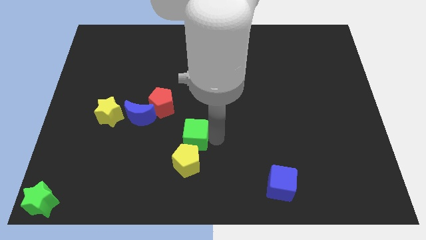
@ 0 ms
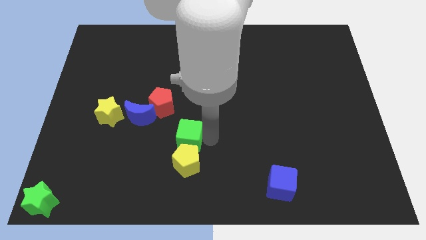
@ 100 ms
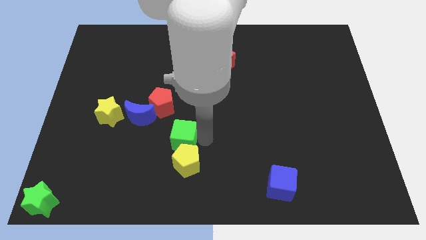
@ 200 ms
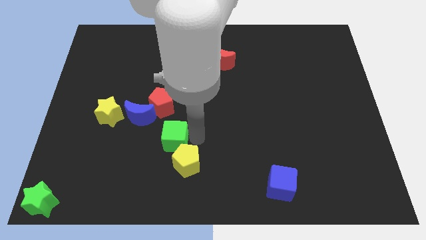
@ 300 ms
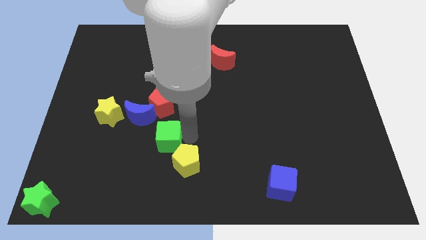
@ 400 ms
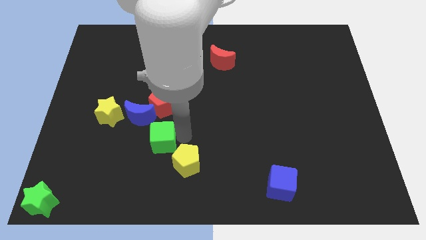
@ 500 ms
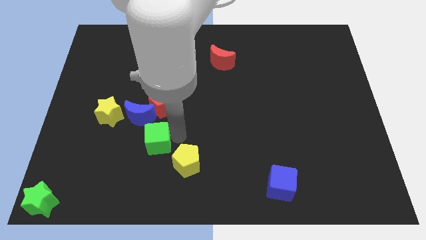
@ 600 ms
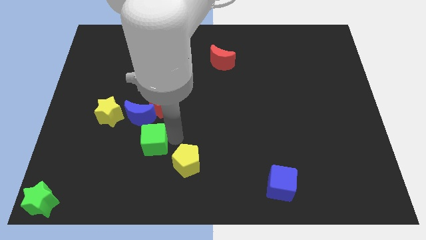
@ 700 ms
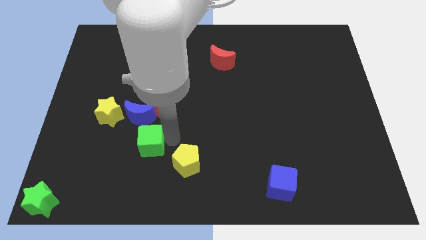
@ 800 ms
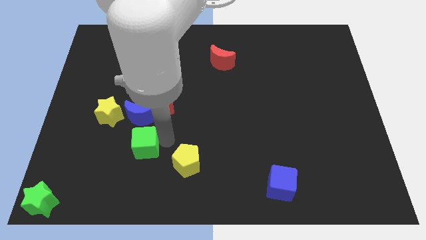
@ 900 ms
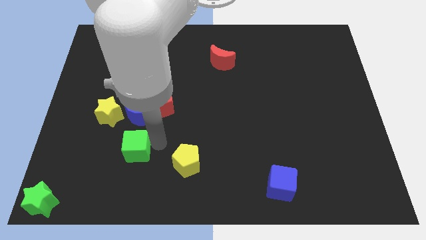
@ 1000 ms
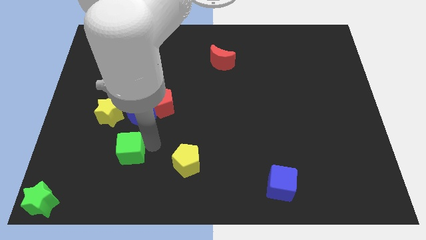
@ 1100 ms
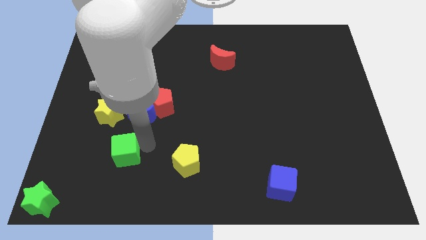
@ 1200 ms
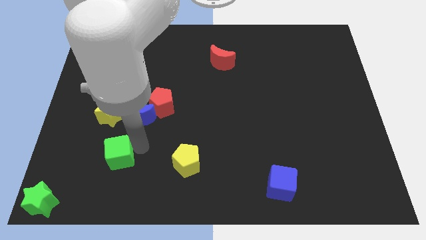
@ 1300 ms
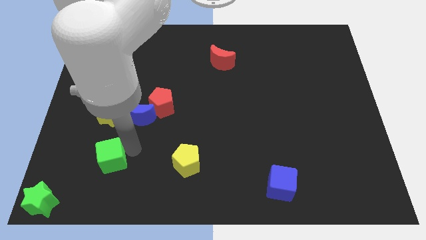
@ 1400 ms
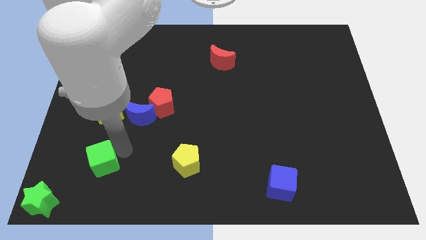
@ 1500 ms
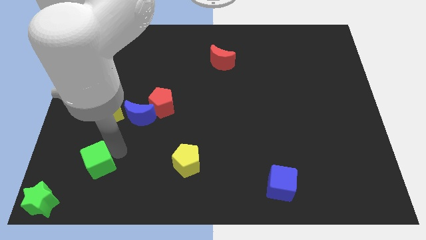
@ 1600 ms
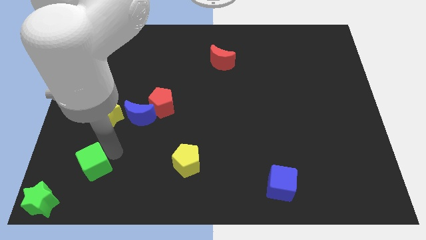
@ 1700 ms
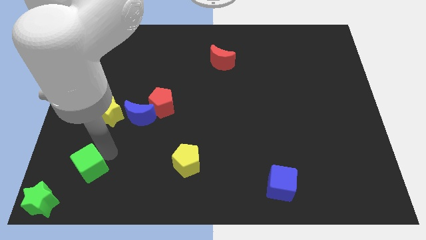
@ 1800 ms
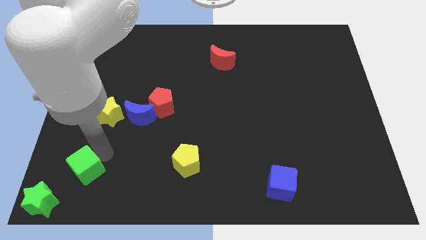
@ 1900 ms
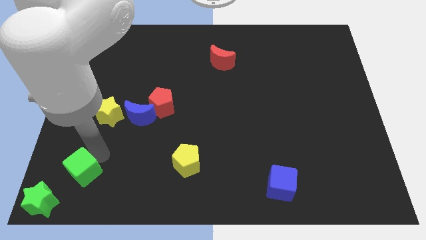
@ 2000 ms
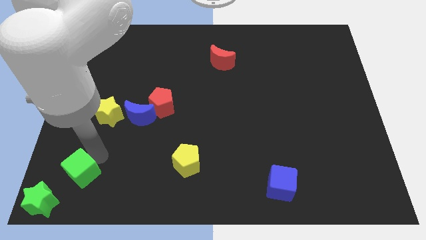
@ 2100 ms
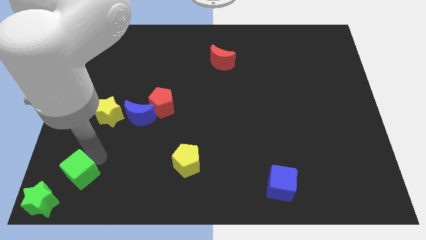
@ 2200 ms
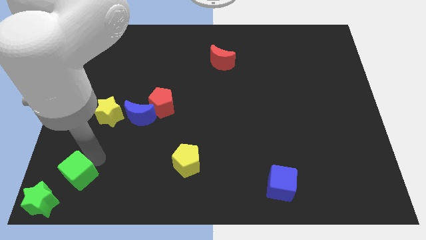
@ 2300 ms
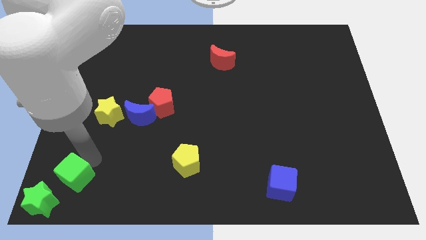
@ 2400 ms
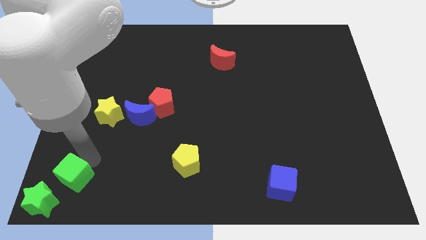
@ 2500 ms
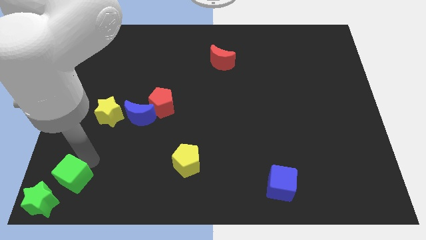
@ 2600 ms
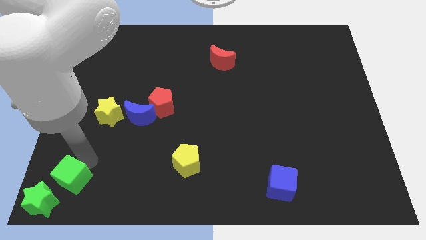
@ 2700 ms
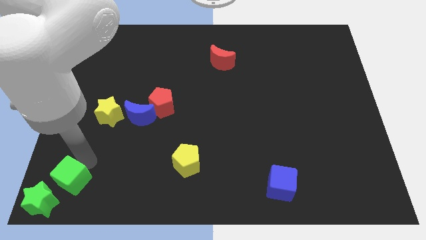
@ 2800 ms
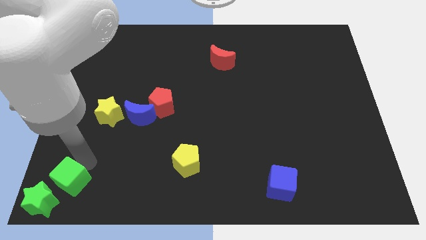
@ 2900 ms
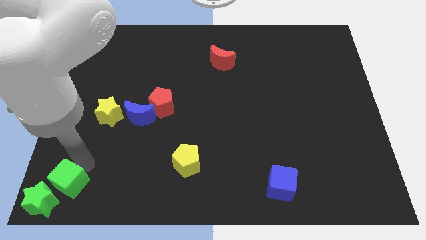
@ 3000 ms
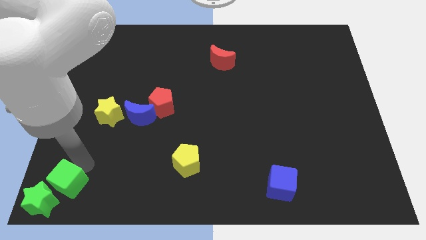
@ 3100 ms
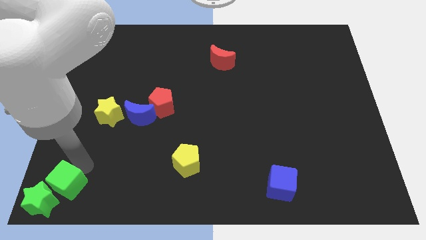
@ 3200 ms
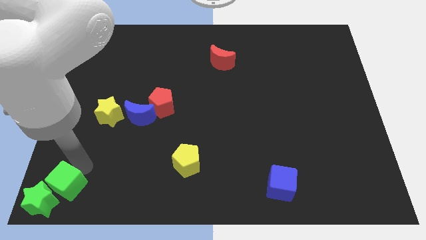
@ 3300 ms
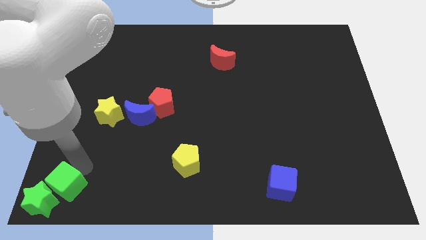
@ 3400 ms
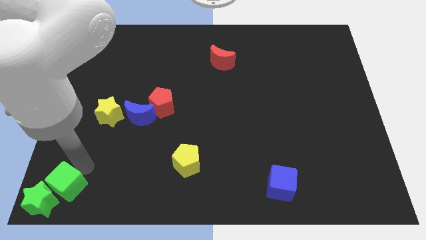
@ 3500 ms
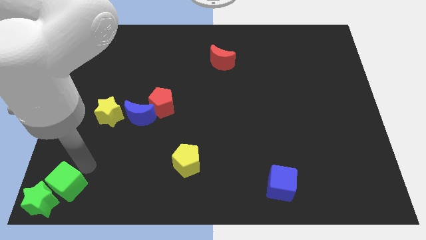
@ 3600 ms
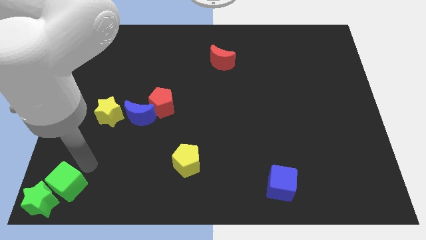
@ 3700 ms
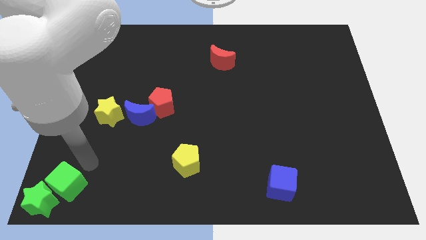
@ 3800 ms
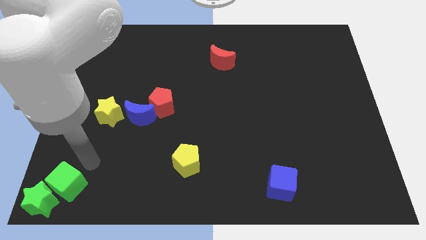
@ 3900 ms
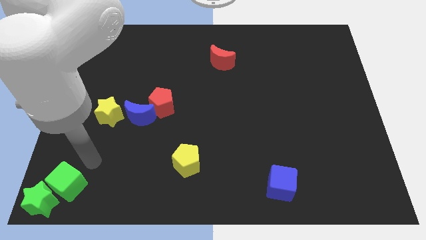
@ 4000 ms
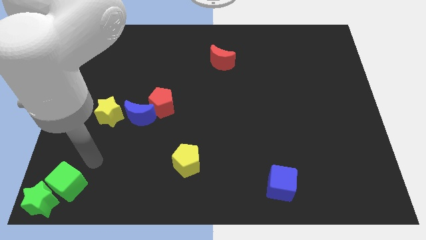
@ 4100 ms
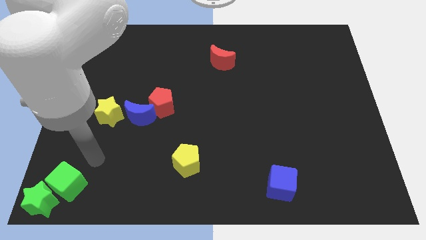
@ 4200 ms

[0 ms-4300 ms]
push the green cube into the top right of the green star

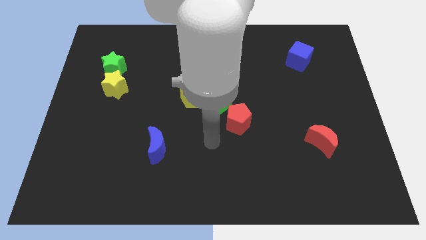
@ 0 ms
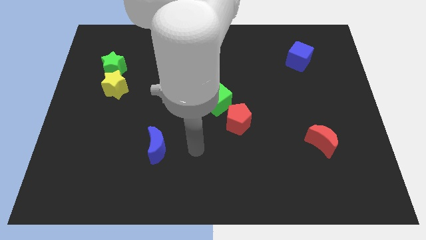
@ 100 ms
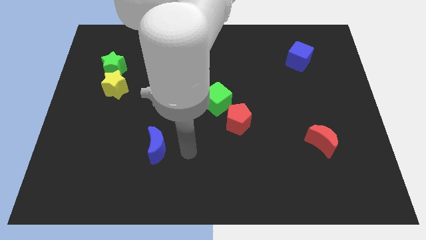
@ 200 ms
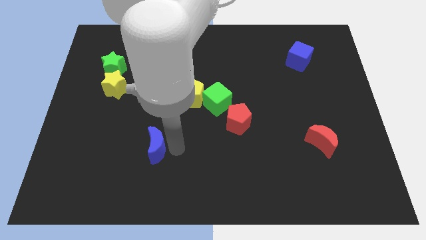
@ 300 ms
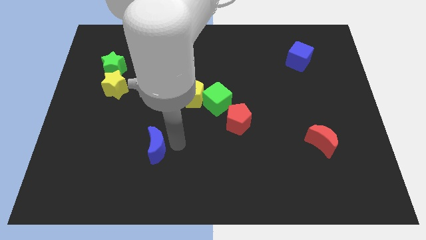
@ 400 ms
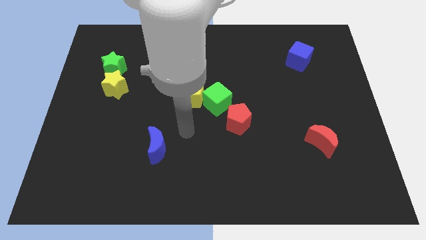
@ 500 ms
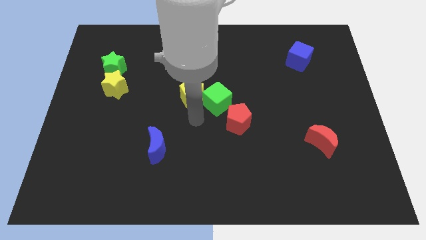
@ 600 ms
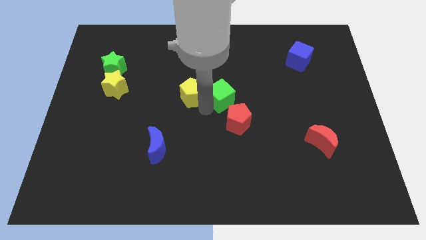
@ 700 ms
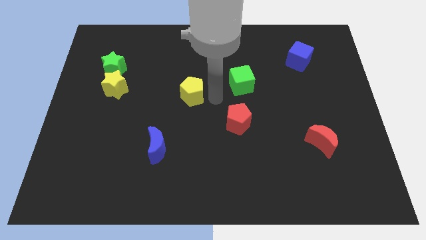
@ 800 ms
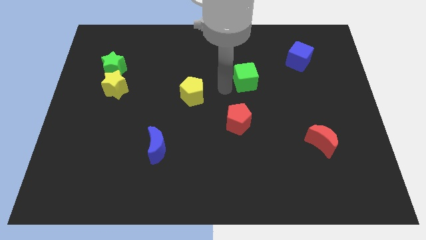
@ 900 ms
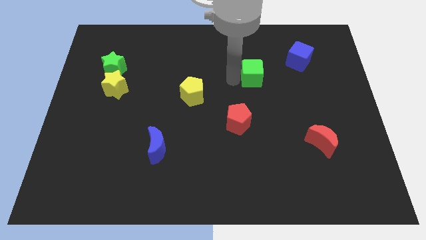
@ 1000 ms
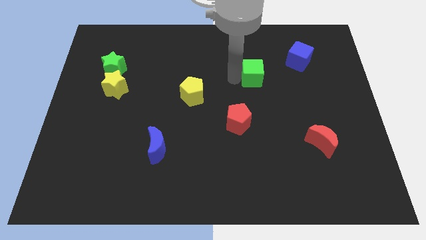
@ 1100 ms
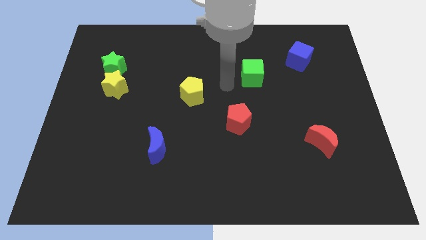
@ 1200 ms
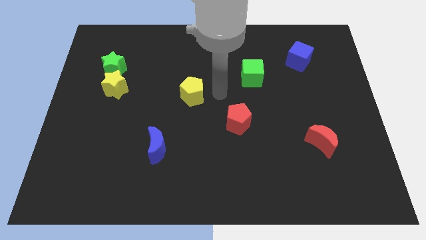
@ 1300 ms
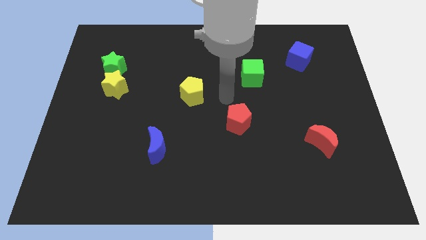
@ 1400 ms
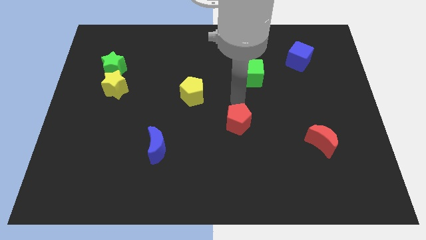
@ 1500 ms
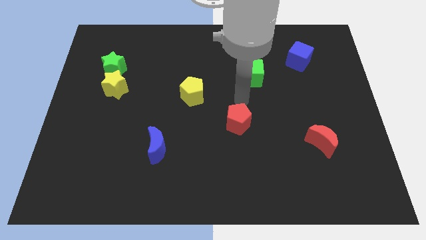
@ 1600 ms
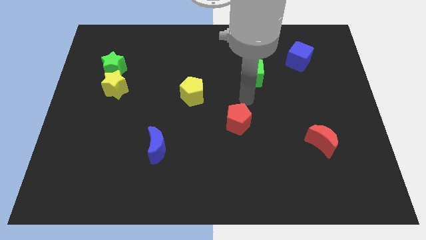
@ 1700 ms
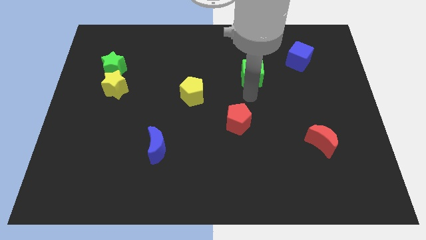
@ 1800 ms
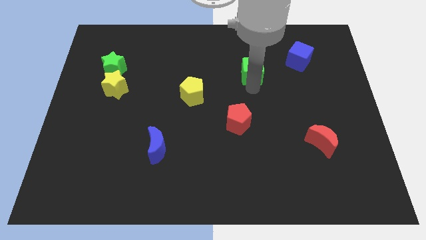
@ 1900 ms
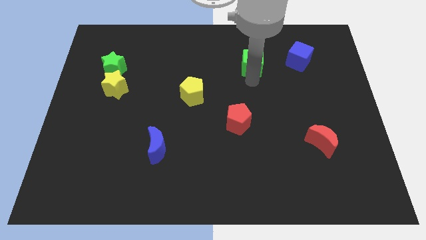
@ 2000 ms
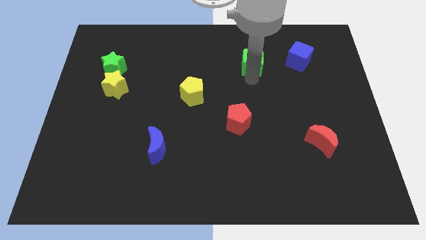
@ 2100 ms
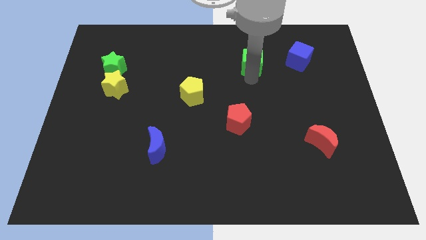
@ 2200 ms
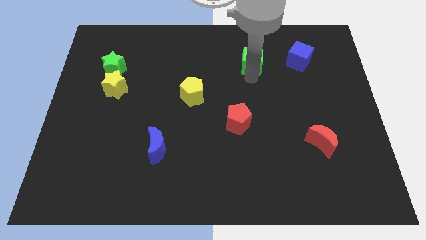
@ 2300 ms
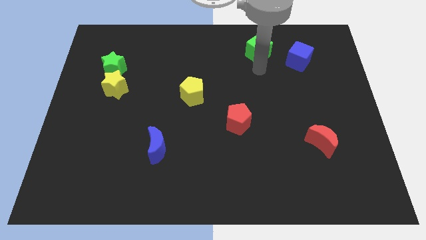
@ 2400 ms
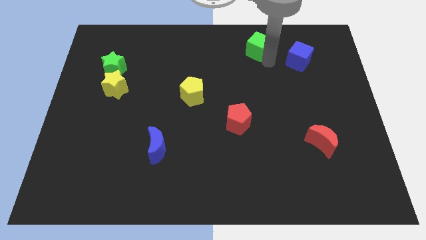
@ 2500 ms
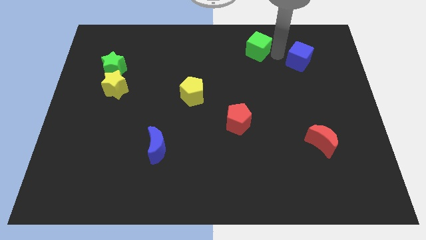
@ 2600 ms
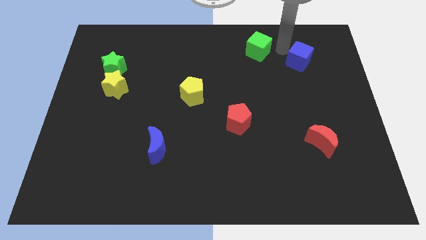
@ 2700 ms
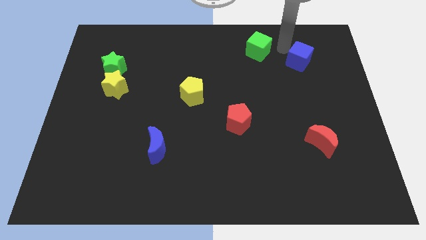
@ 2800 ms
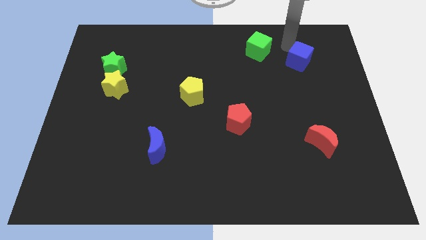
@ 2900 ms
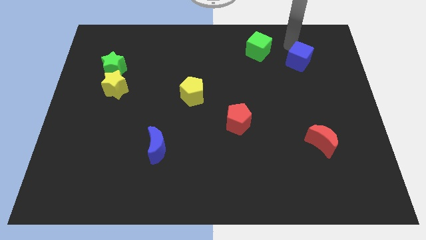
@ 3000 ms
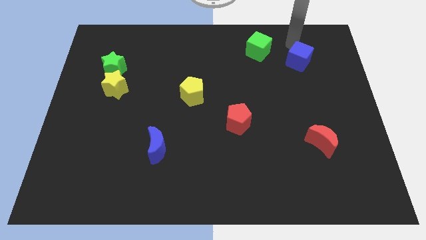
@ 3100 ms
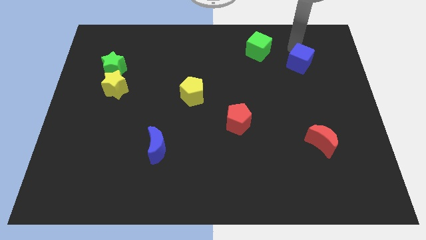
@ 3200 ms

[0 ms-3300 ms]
place the green cube to the left of blue cube

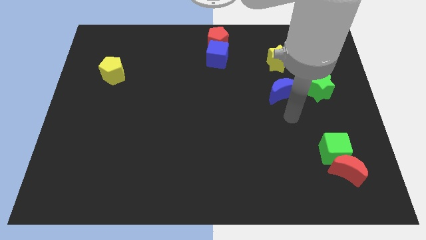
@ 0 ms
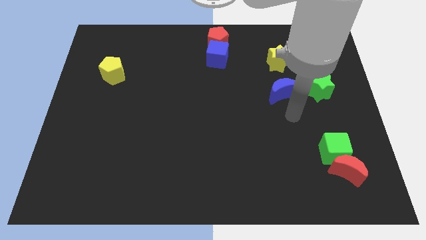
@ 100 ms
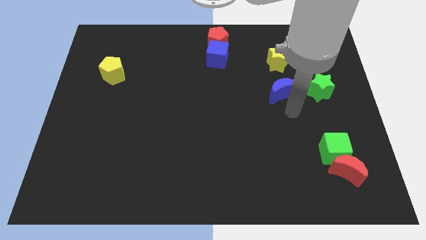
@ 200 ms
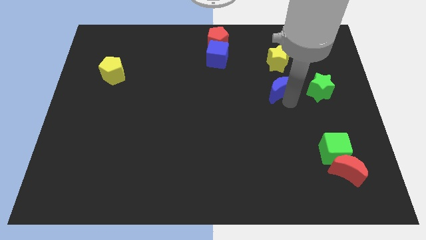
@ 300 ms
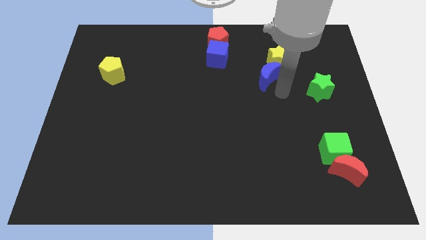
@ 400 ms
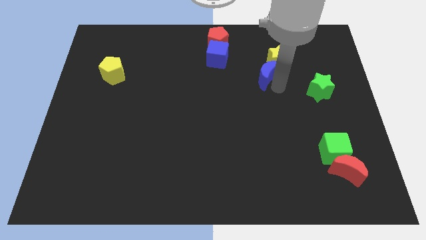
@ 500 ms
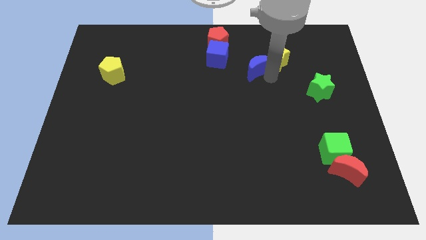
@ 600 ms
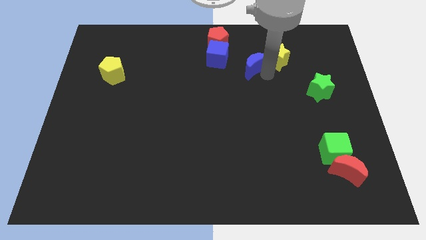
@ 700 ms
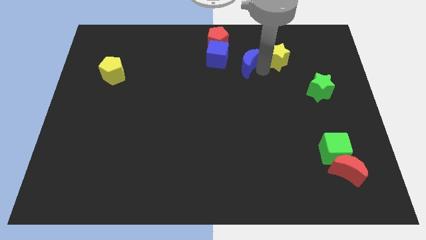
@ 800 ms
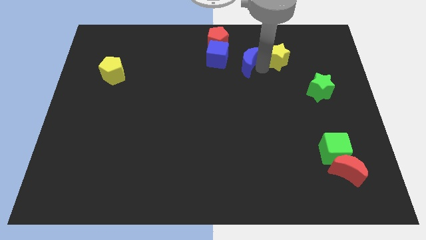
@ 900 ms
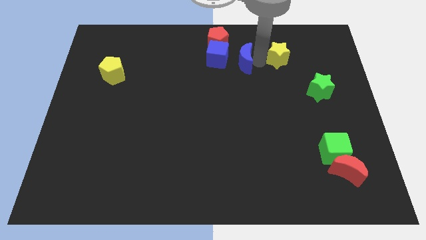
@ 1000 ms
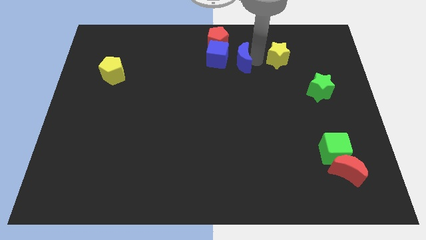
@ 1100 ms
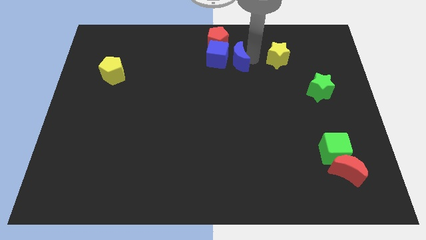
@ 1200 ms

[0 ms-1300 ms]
place blue moon to the right of the blue cube

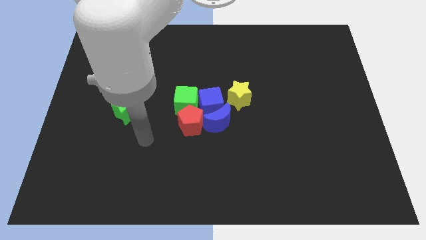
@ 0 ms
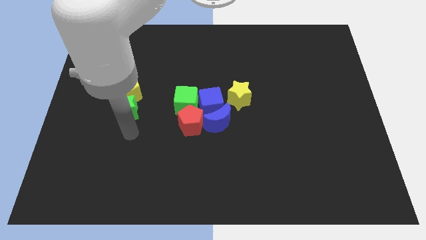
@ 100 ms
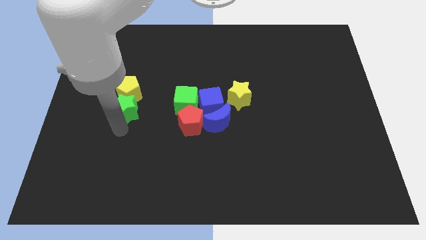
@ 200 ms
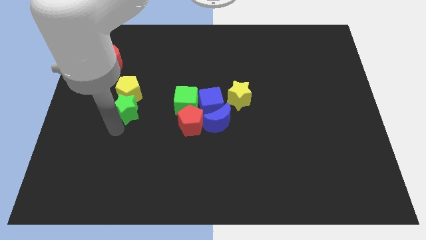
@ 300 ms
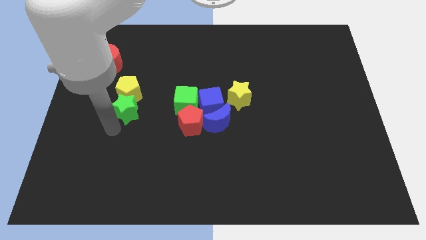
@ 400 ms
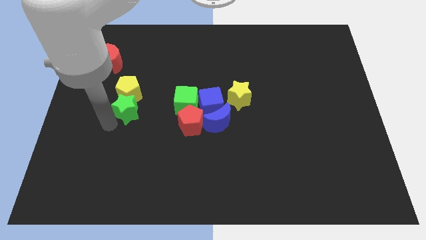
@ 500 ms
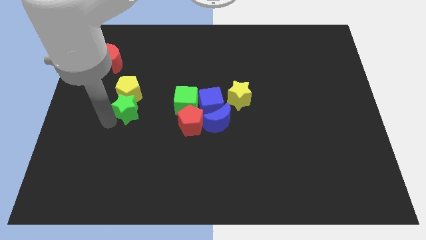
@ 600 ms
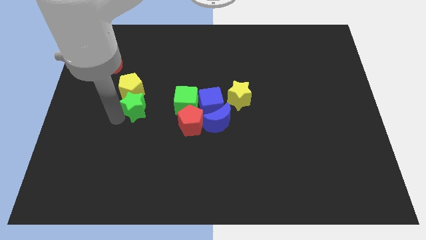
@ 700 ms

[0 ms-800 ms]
touch the bottom of green star
